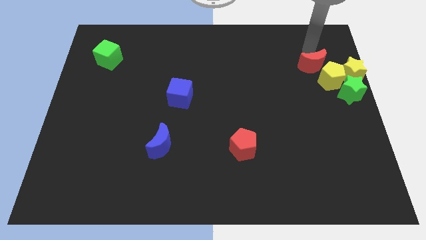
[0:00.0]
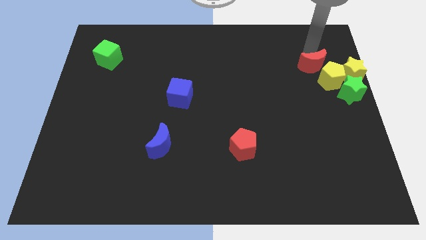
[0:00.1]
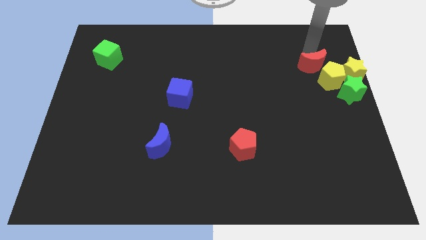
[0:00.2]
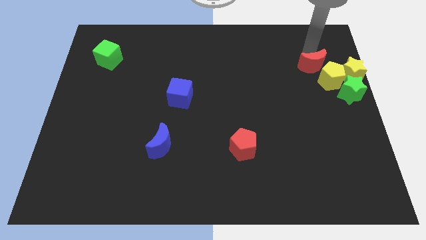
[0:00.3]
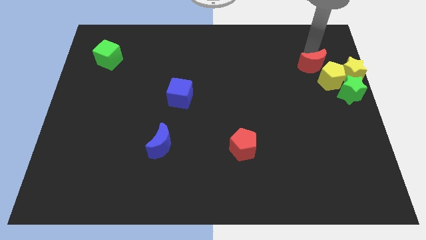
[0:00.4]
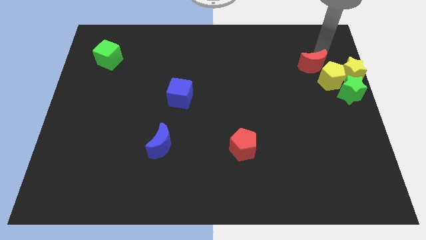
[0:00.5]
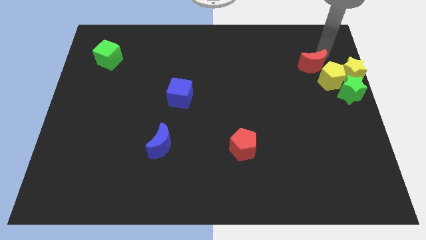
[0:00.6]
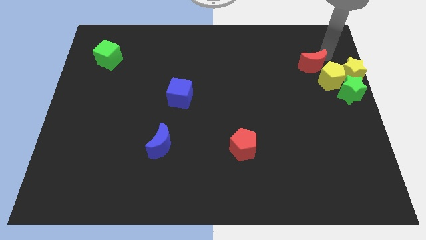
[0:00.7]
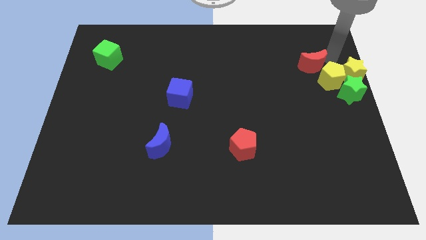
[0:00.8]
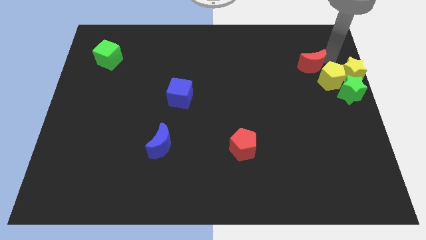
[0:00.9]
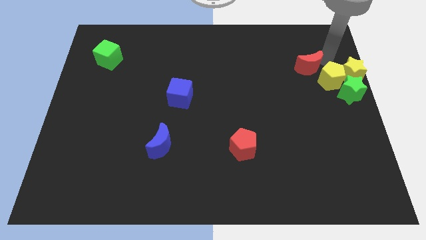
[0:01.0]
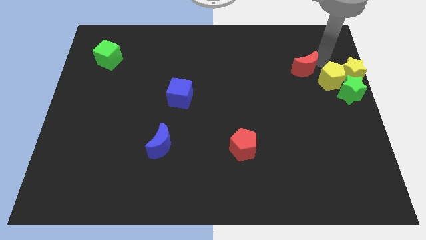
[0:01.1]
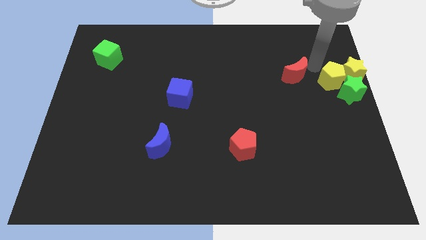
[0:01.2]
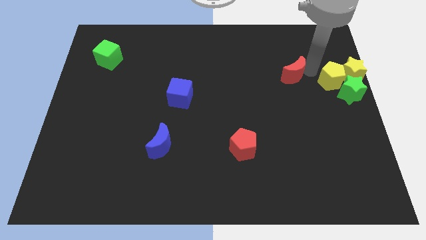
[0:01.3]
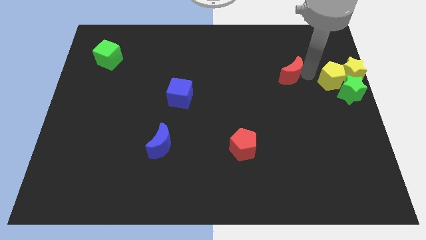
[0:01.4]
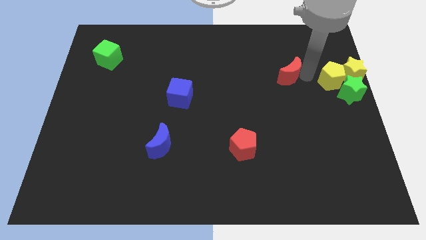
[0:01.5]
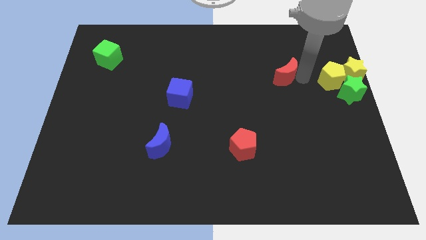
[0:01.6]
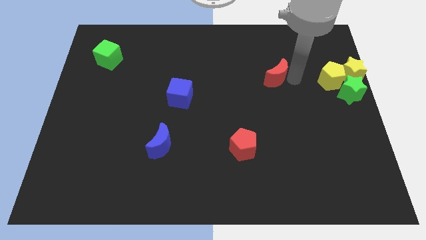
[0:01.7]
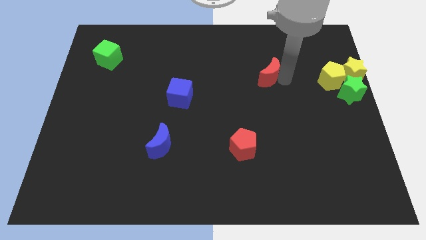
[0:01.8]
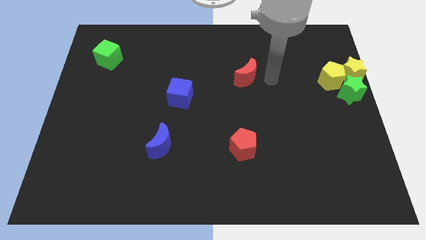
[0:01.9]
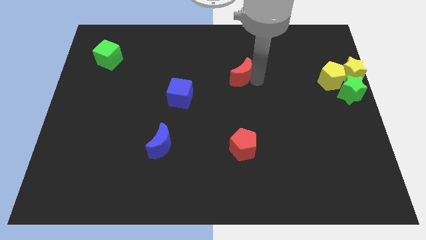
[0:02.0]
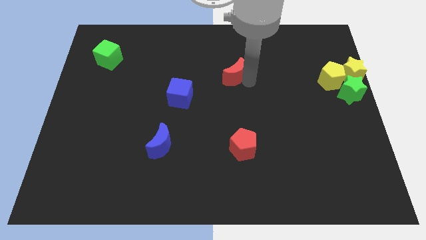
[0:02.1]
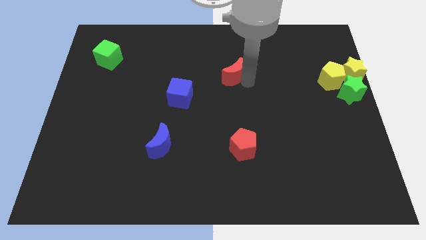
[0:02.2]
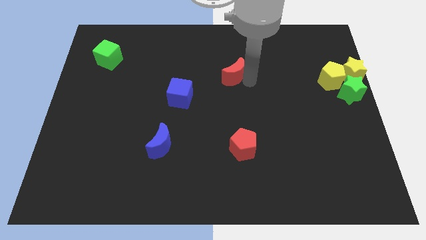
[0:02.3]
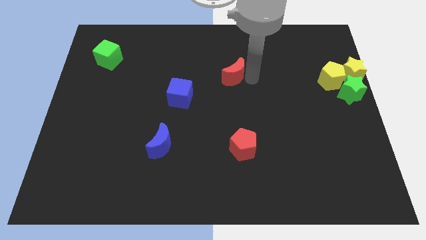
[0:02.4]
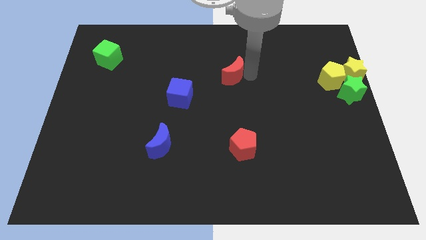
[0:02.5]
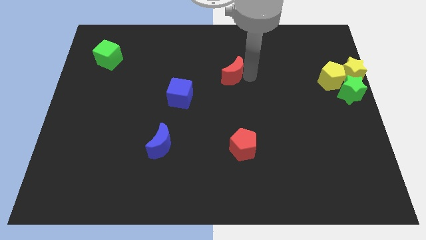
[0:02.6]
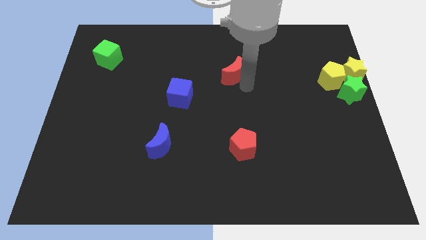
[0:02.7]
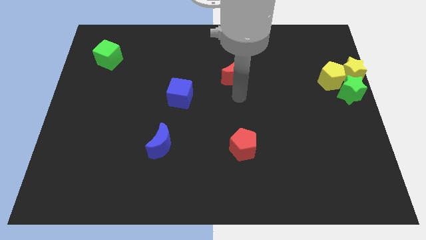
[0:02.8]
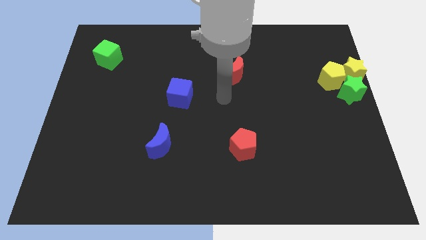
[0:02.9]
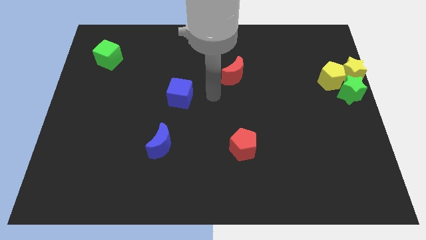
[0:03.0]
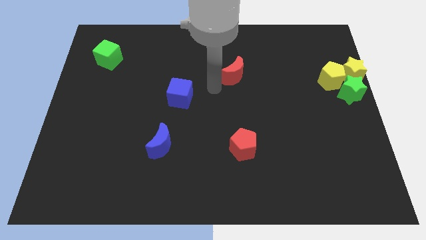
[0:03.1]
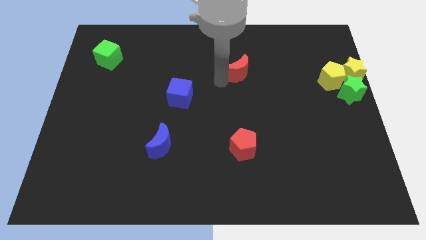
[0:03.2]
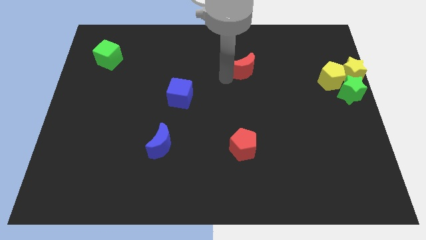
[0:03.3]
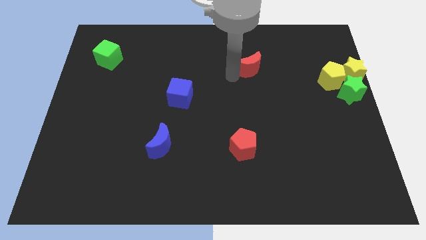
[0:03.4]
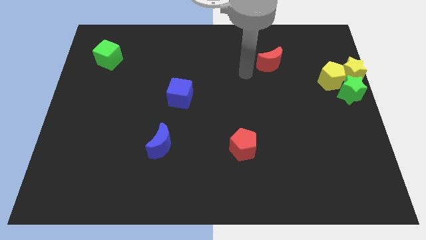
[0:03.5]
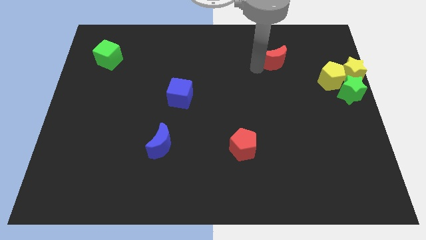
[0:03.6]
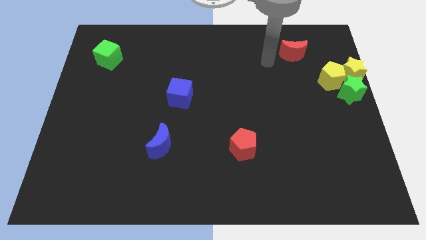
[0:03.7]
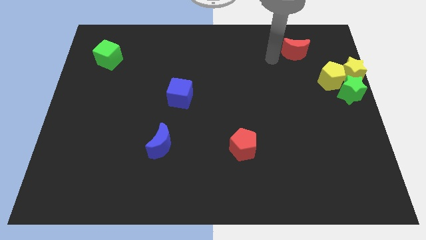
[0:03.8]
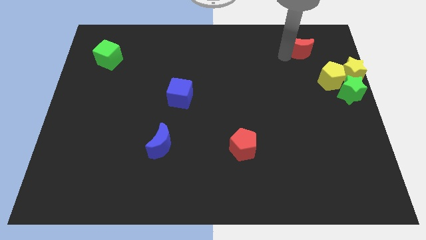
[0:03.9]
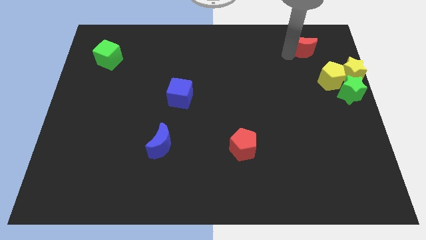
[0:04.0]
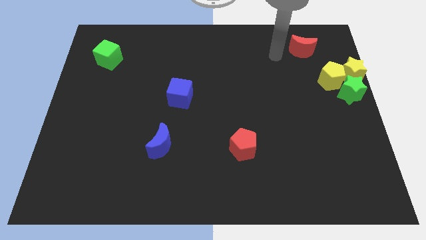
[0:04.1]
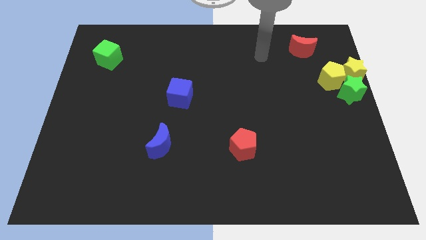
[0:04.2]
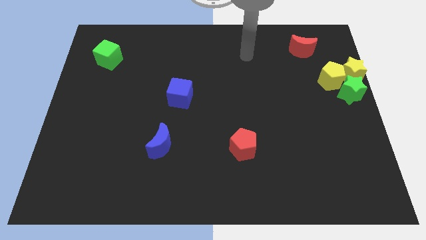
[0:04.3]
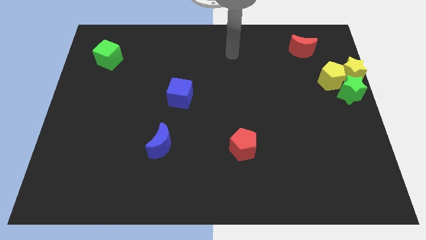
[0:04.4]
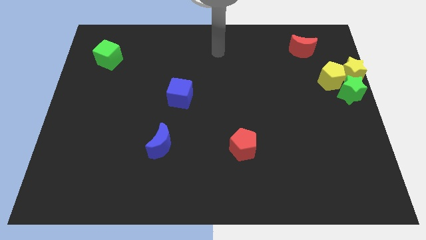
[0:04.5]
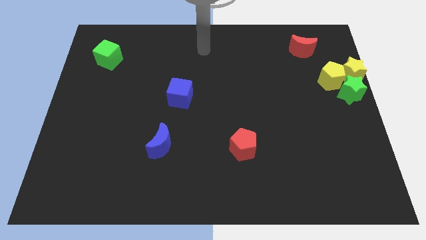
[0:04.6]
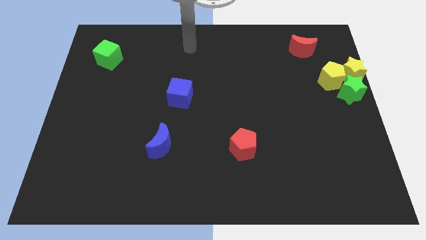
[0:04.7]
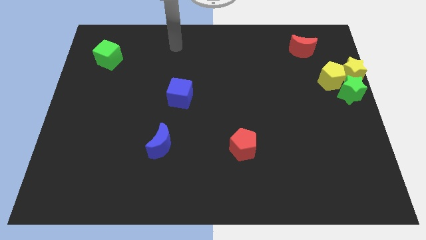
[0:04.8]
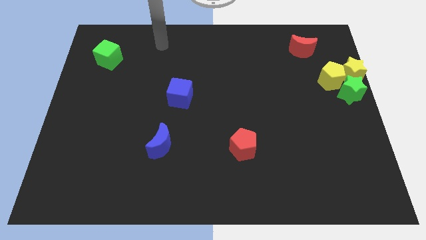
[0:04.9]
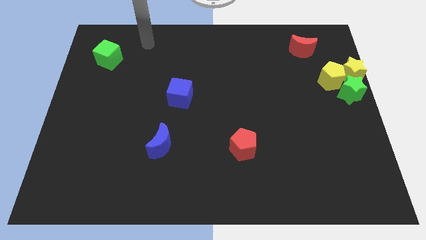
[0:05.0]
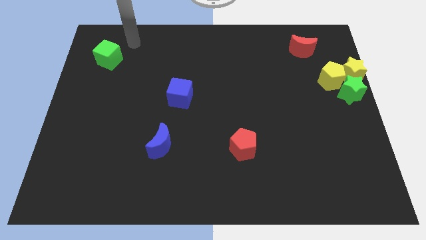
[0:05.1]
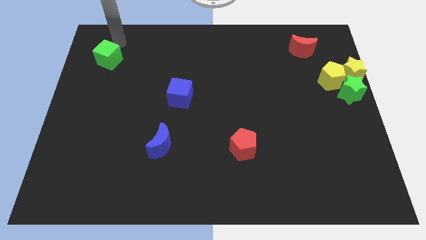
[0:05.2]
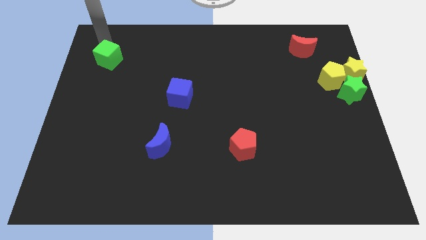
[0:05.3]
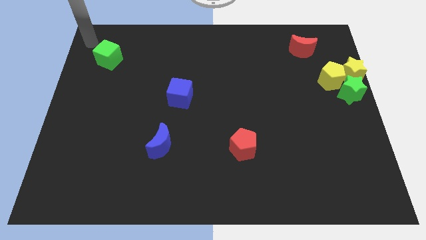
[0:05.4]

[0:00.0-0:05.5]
move red moon back and forth

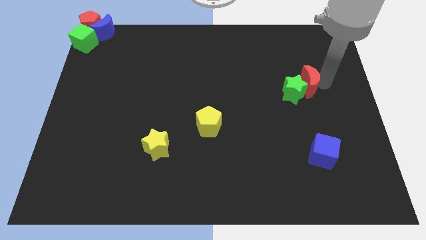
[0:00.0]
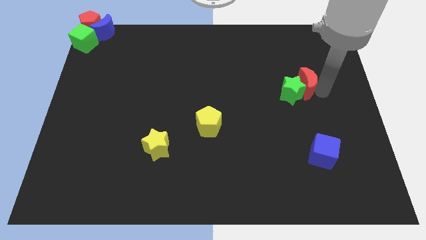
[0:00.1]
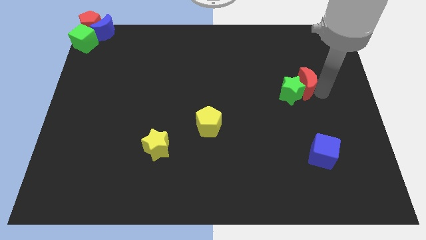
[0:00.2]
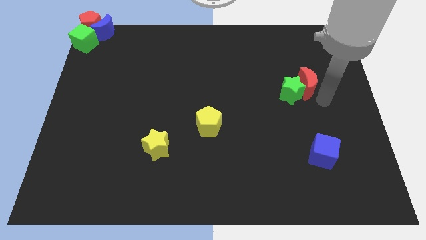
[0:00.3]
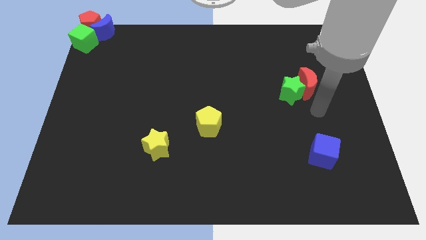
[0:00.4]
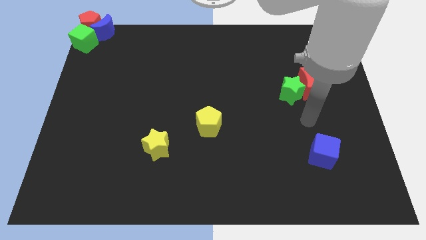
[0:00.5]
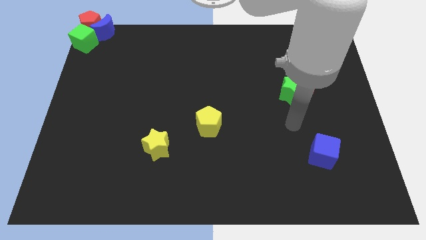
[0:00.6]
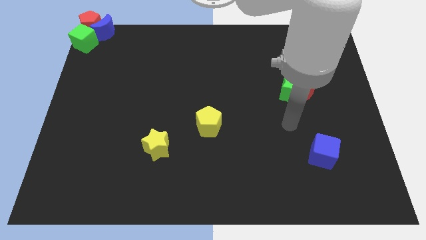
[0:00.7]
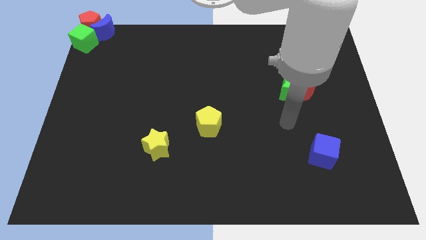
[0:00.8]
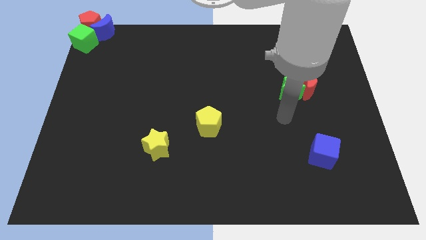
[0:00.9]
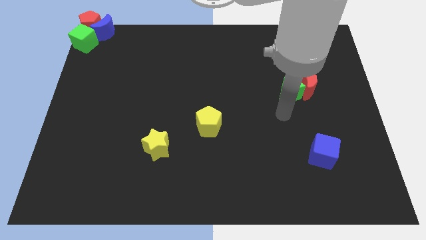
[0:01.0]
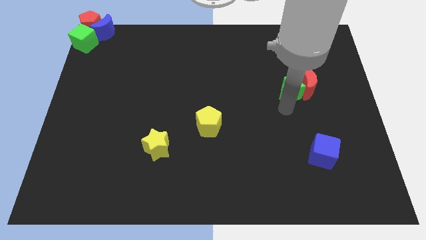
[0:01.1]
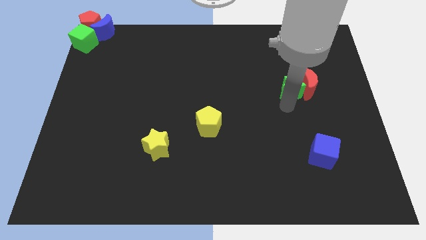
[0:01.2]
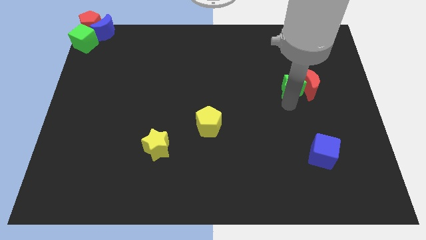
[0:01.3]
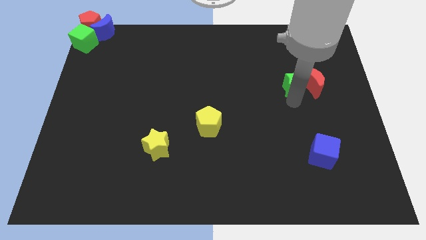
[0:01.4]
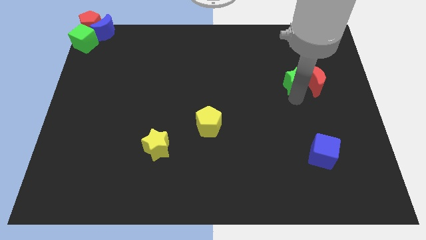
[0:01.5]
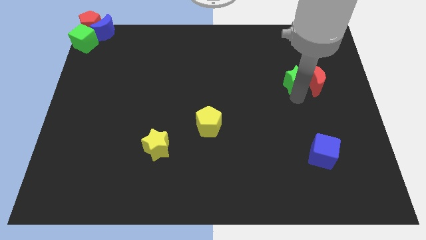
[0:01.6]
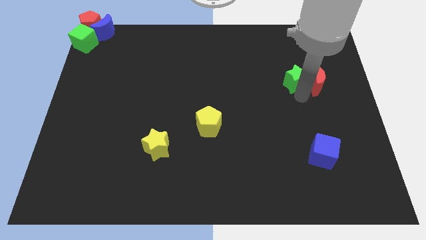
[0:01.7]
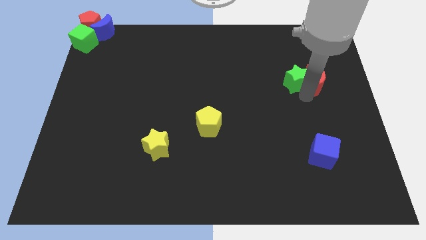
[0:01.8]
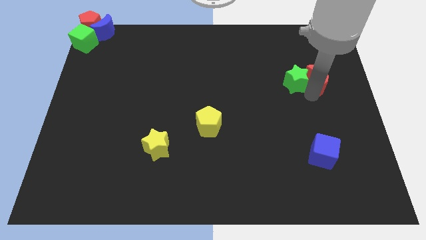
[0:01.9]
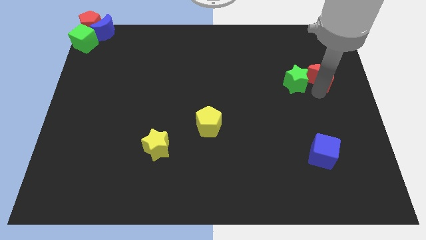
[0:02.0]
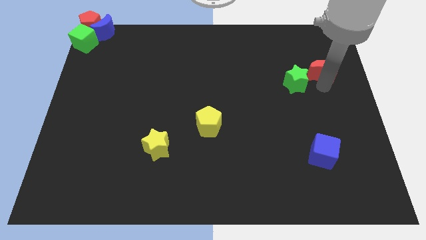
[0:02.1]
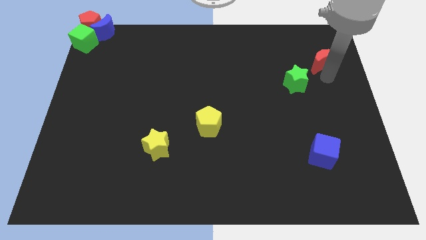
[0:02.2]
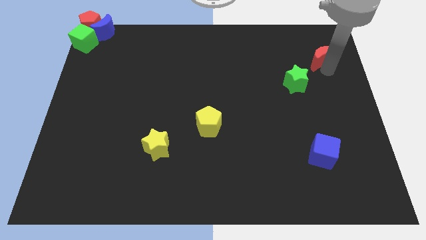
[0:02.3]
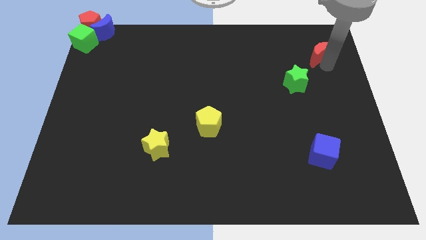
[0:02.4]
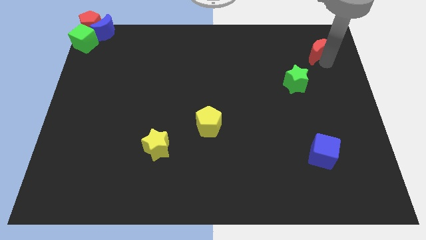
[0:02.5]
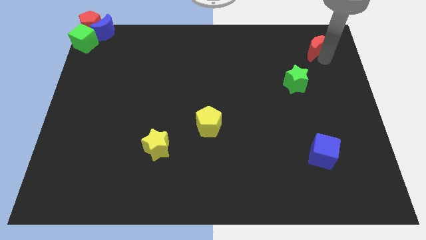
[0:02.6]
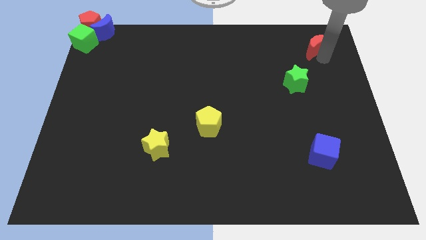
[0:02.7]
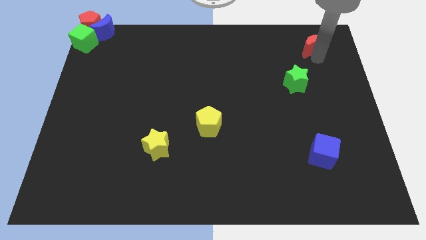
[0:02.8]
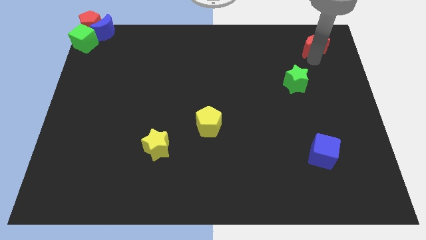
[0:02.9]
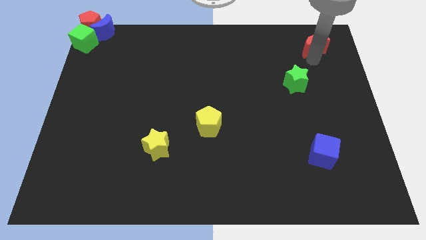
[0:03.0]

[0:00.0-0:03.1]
slide red crescent towards the top right

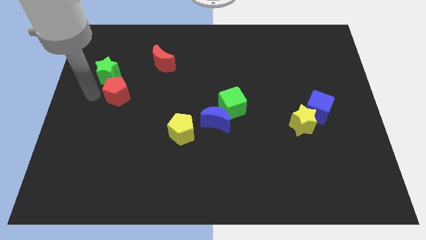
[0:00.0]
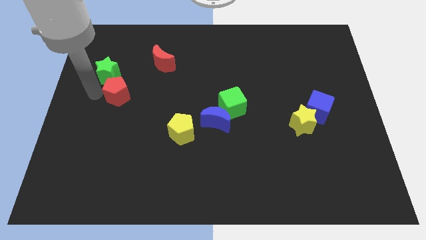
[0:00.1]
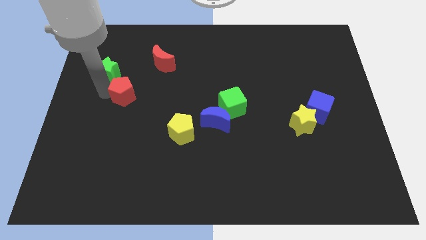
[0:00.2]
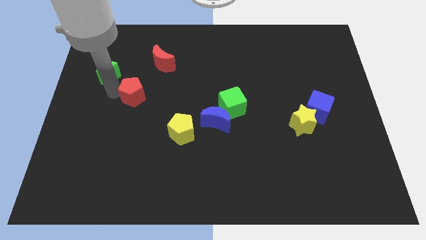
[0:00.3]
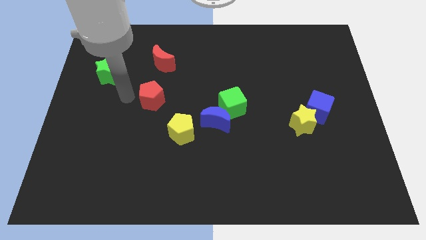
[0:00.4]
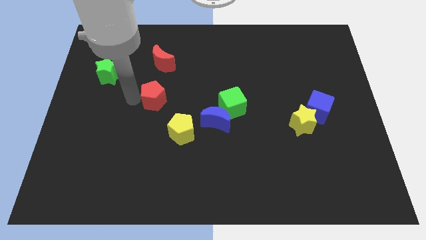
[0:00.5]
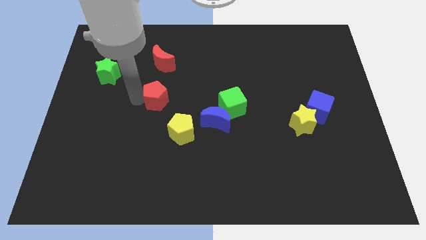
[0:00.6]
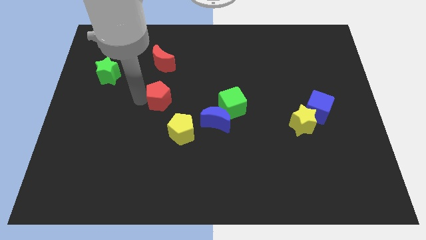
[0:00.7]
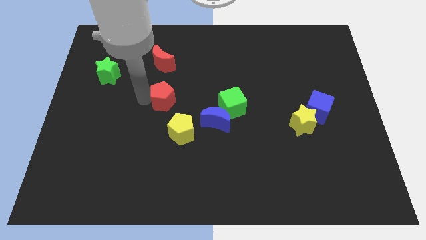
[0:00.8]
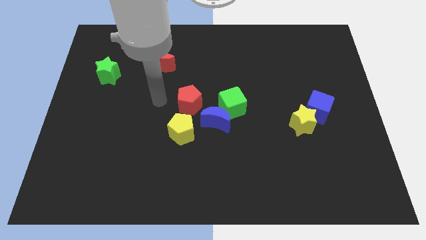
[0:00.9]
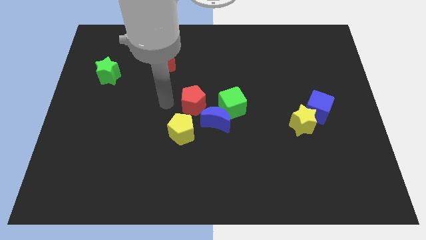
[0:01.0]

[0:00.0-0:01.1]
place the red pentagon to the top left of blue moon
